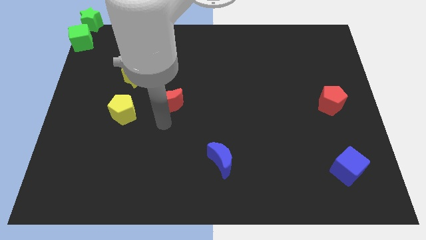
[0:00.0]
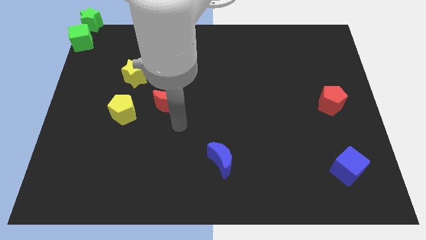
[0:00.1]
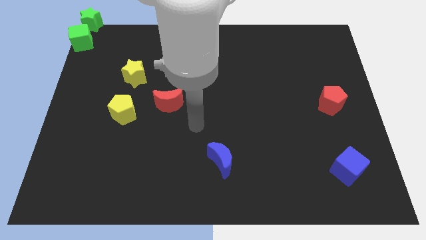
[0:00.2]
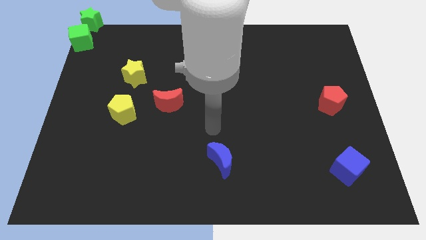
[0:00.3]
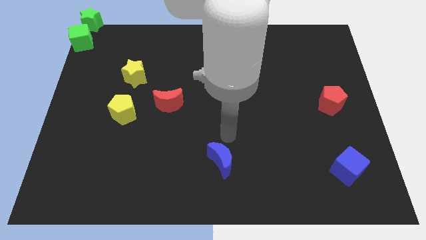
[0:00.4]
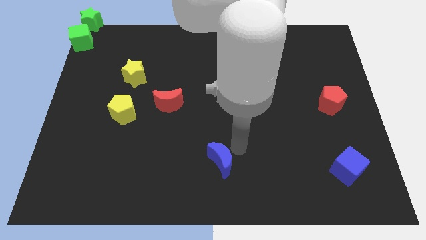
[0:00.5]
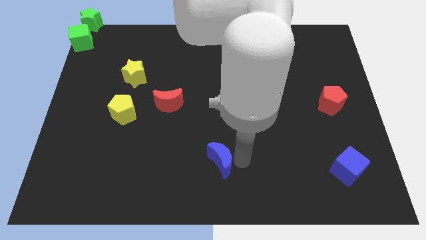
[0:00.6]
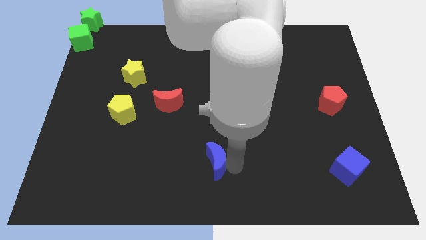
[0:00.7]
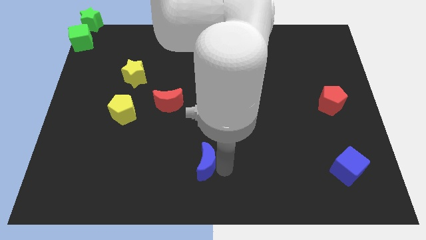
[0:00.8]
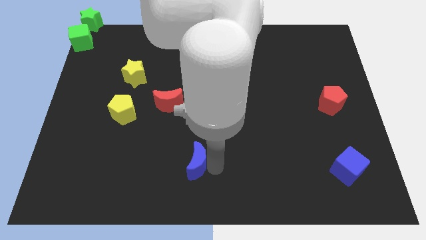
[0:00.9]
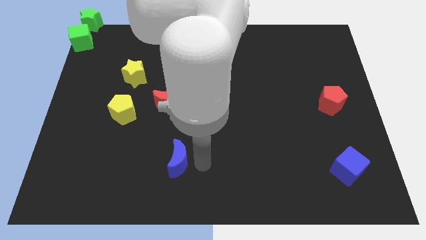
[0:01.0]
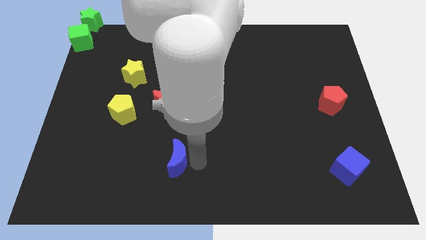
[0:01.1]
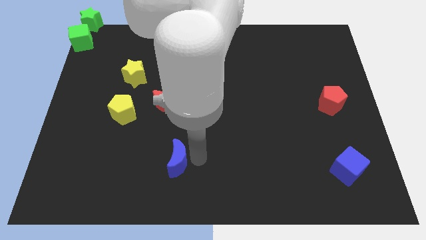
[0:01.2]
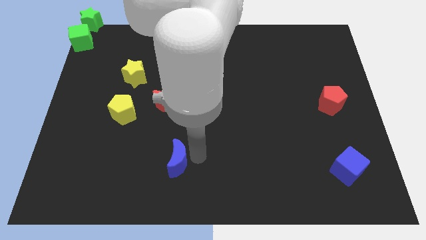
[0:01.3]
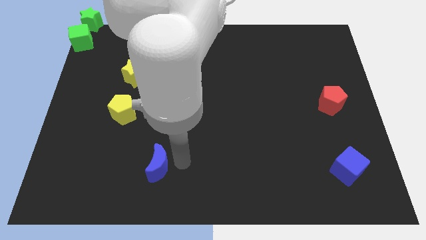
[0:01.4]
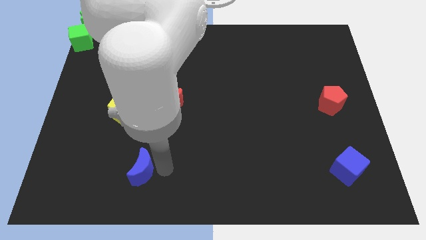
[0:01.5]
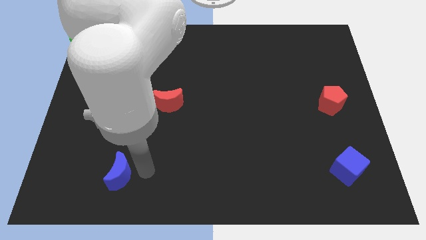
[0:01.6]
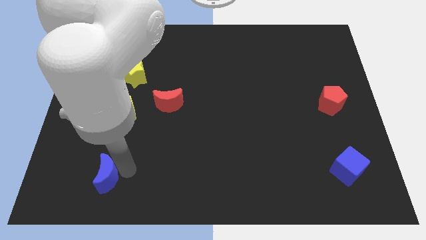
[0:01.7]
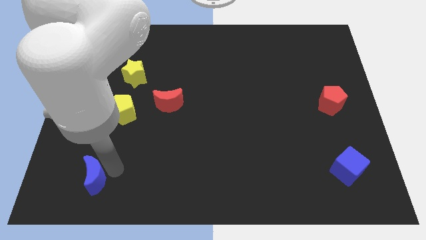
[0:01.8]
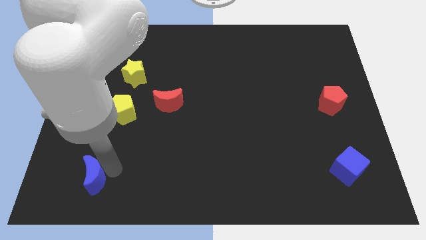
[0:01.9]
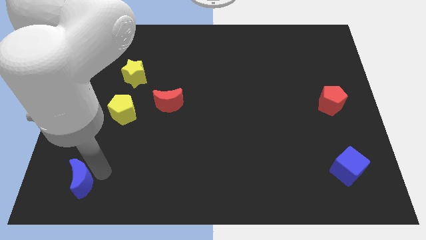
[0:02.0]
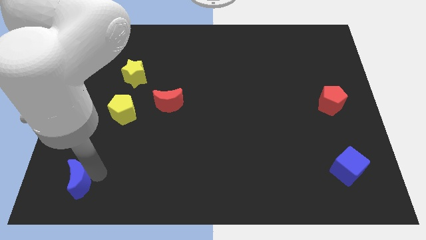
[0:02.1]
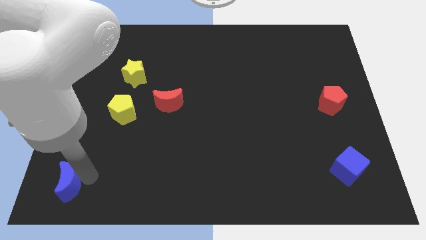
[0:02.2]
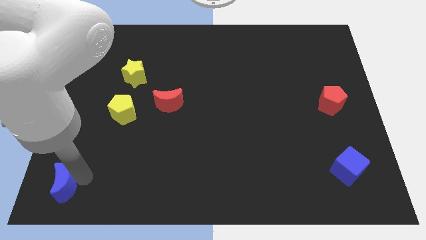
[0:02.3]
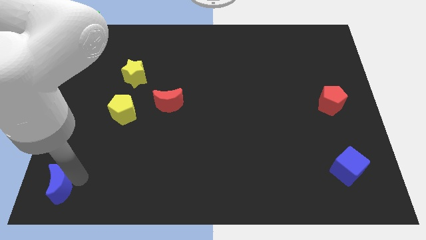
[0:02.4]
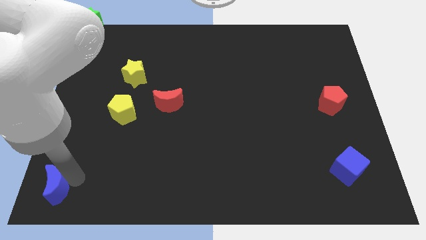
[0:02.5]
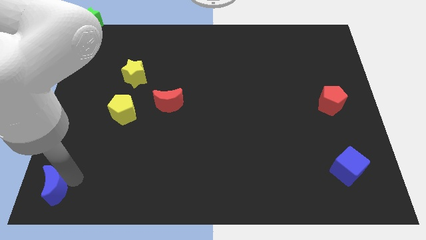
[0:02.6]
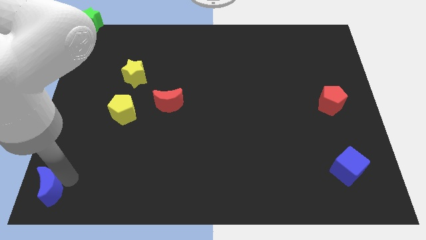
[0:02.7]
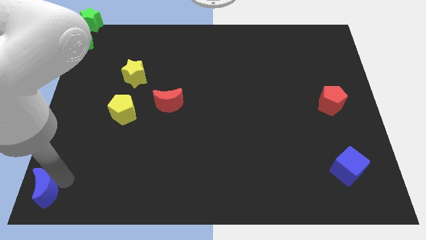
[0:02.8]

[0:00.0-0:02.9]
push the blue moon towards the left side of the board

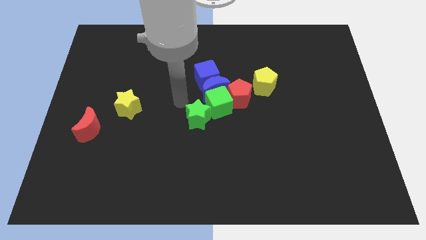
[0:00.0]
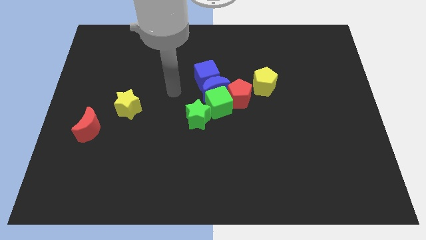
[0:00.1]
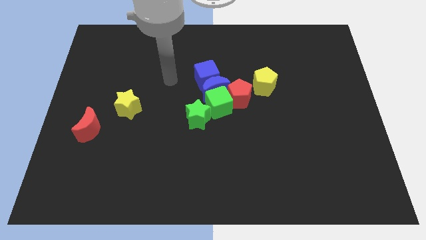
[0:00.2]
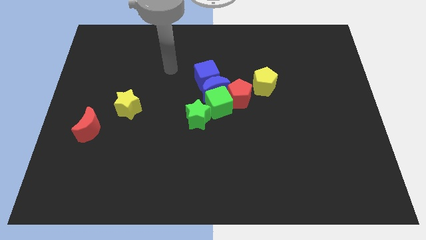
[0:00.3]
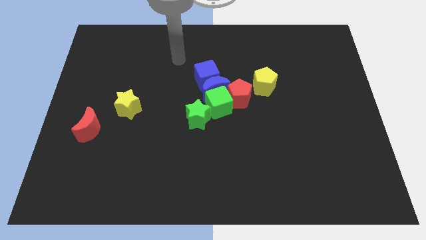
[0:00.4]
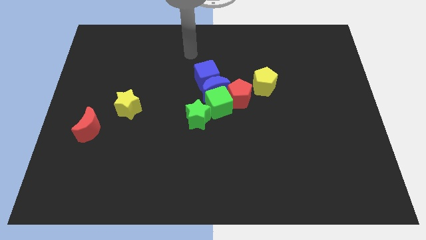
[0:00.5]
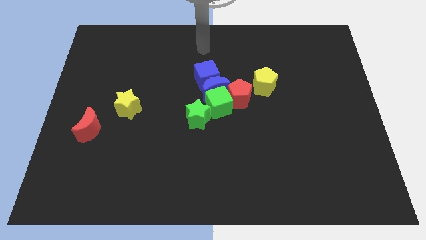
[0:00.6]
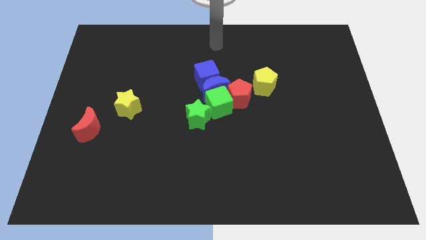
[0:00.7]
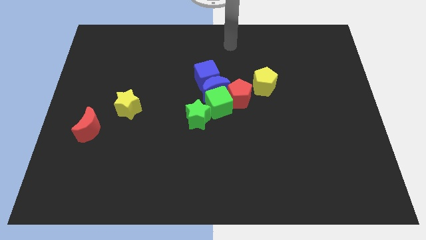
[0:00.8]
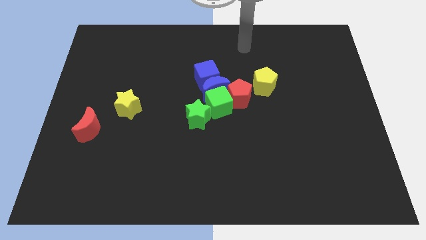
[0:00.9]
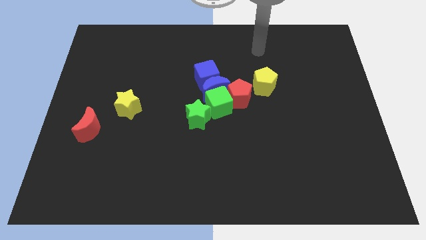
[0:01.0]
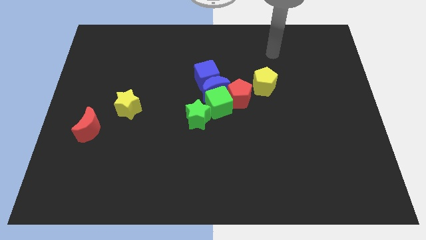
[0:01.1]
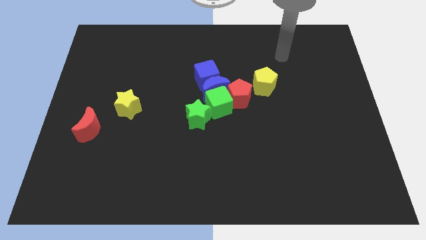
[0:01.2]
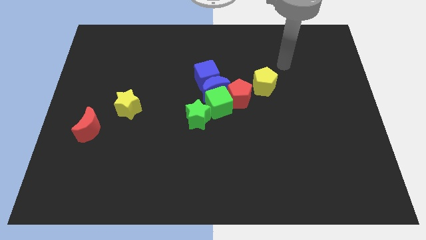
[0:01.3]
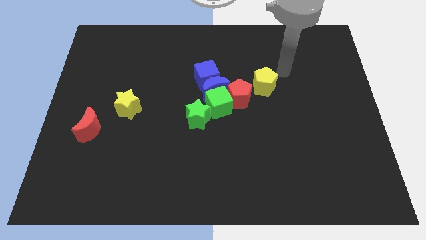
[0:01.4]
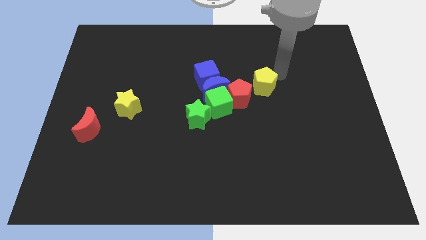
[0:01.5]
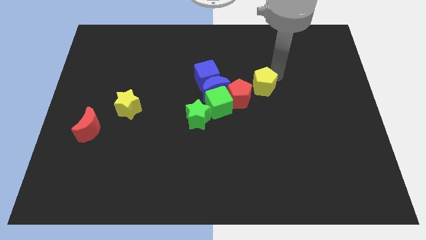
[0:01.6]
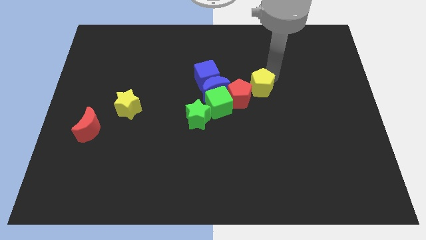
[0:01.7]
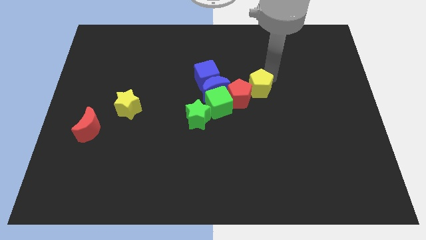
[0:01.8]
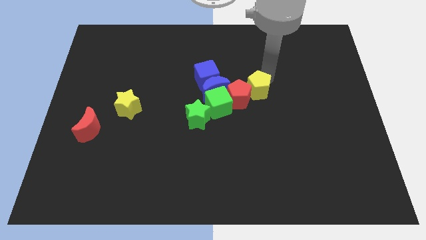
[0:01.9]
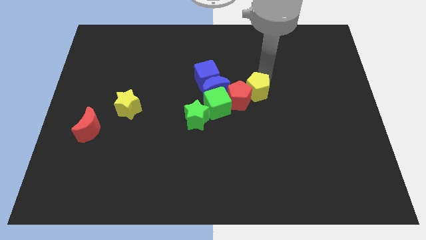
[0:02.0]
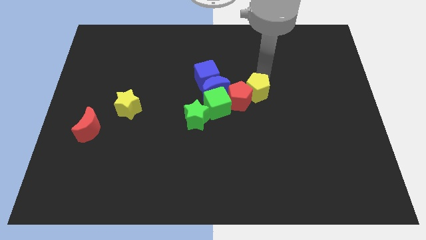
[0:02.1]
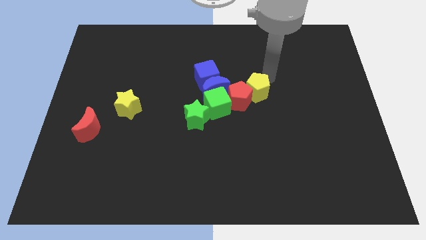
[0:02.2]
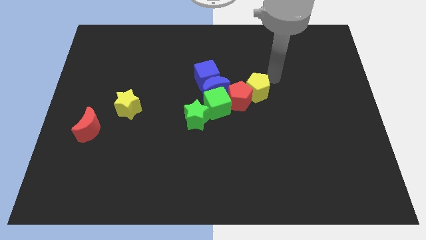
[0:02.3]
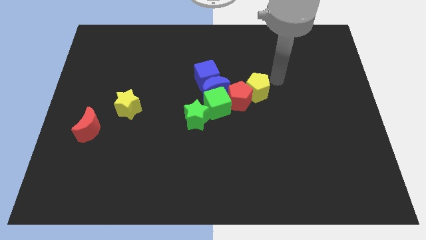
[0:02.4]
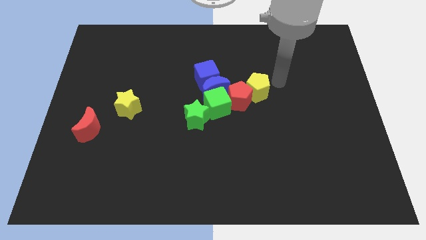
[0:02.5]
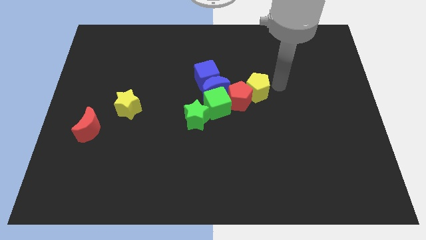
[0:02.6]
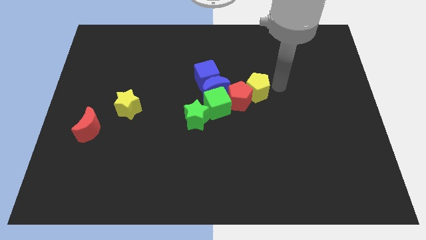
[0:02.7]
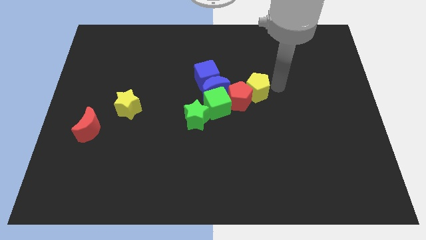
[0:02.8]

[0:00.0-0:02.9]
push the yellow pentagon towards the center of the board

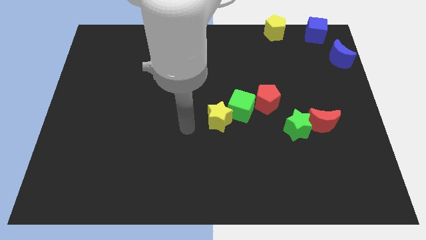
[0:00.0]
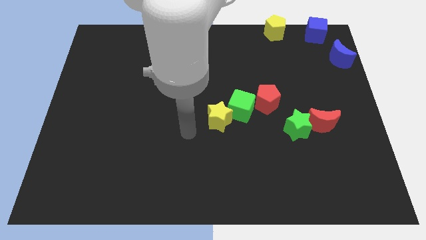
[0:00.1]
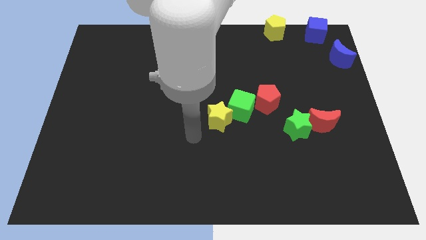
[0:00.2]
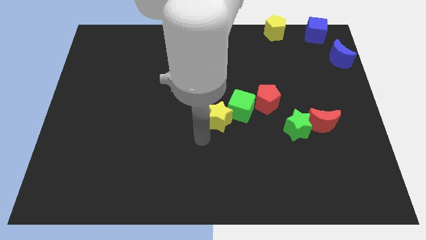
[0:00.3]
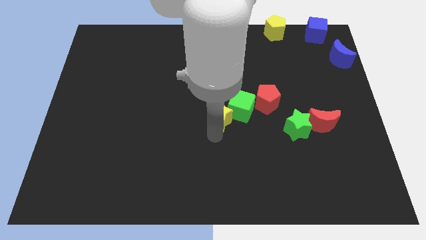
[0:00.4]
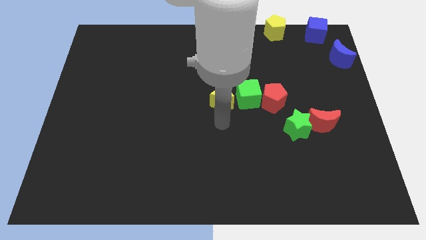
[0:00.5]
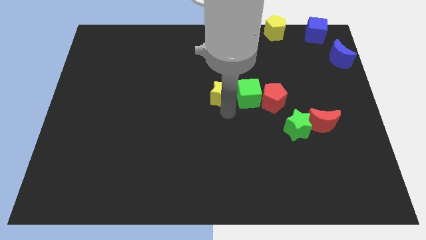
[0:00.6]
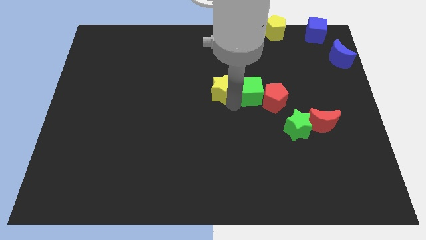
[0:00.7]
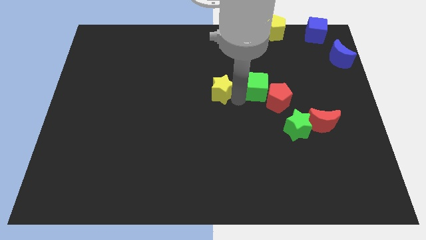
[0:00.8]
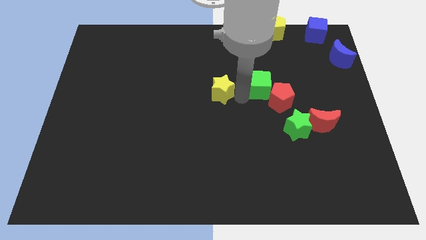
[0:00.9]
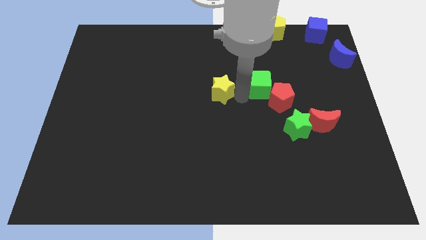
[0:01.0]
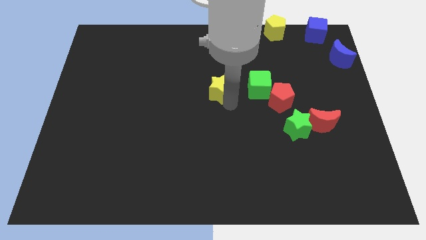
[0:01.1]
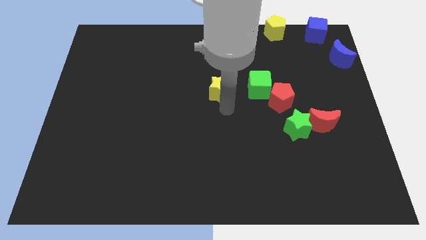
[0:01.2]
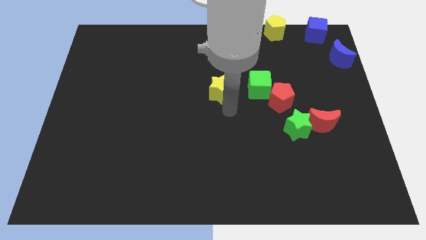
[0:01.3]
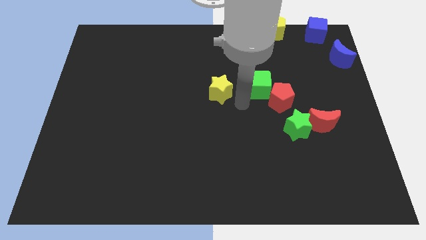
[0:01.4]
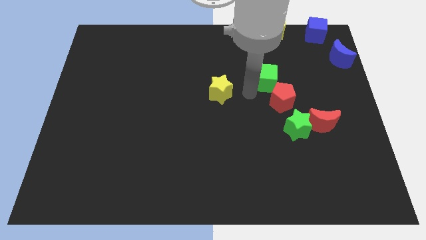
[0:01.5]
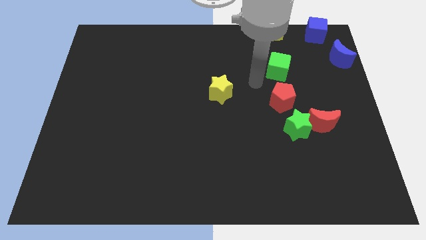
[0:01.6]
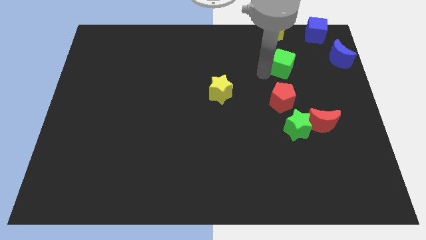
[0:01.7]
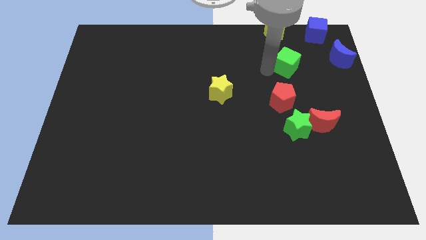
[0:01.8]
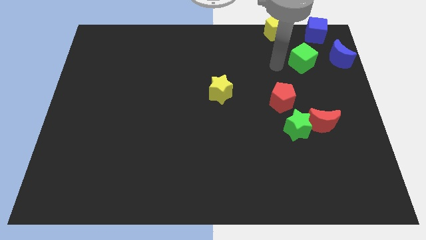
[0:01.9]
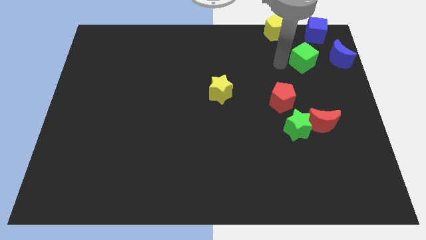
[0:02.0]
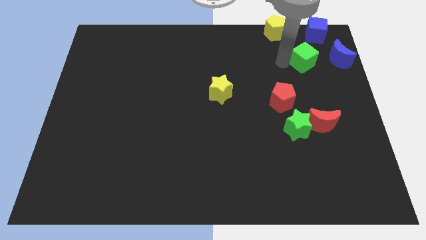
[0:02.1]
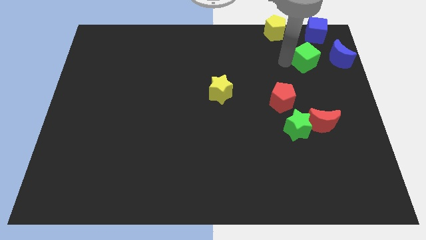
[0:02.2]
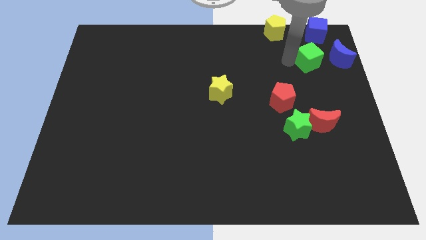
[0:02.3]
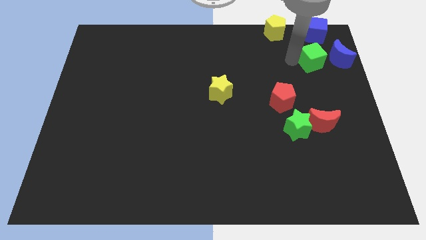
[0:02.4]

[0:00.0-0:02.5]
place a green cube to the left of the blue moon

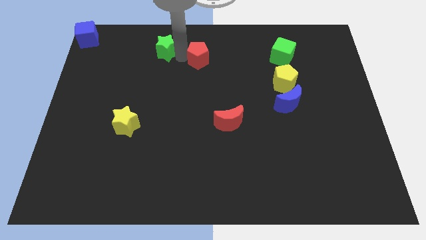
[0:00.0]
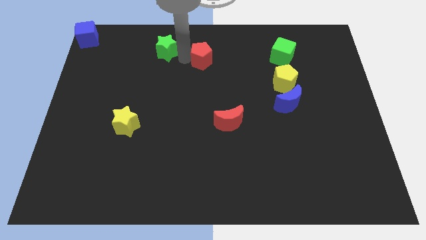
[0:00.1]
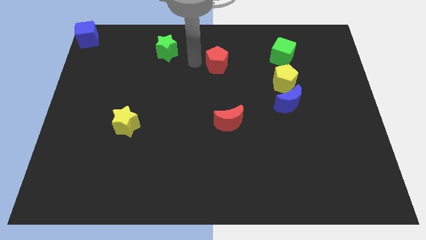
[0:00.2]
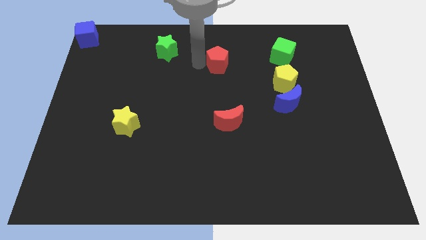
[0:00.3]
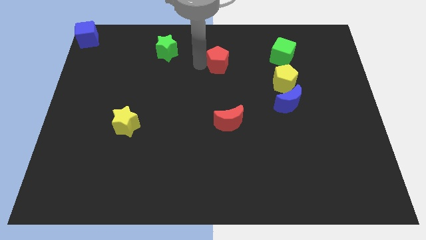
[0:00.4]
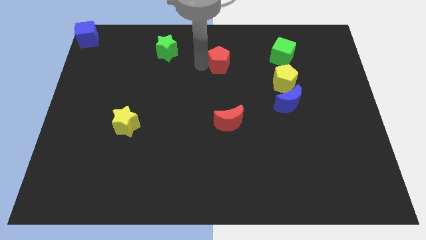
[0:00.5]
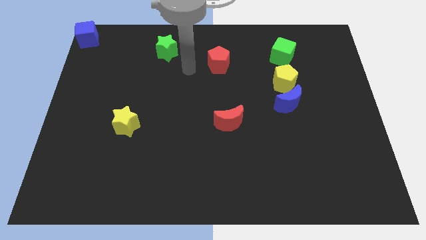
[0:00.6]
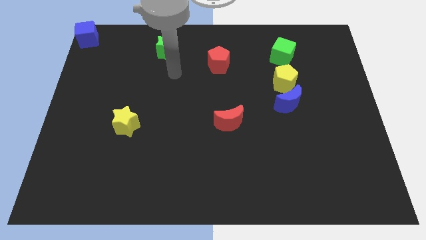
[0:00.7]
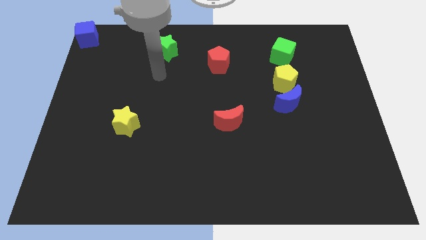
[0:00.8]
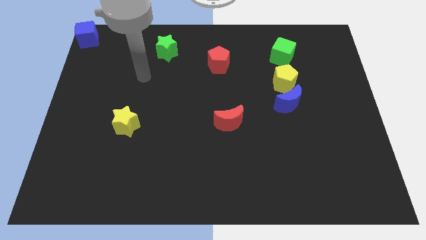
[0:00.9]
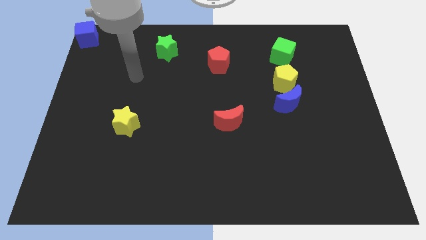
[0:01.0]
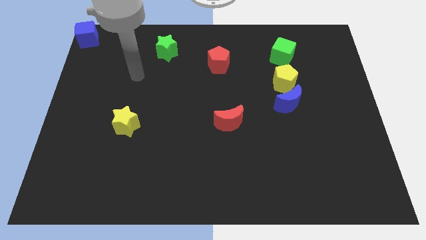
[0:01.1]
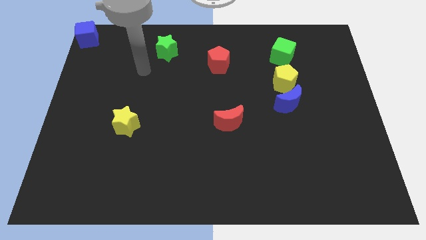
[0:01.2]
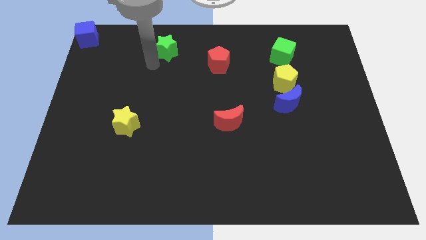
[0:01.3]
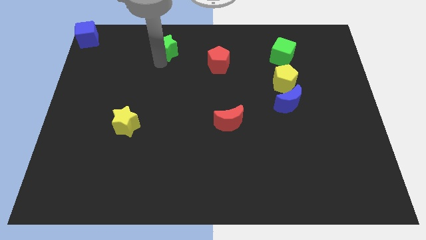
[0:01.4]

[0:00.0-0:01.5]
drag the red pentagon diagonally on the top left side of the yellow pentagon
